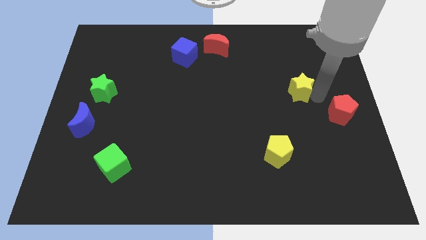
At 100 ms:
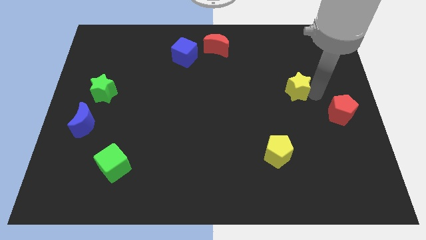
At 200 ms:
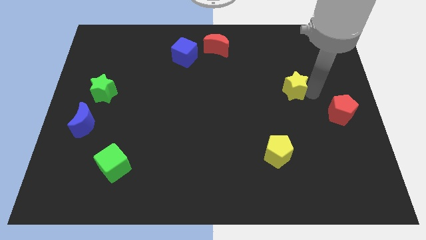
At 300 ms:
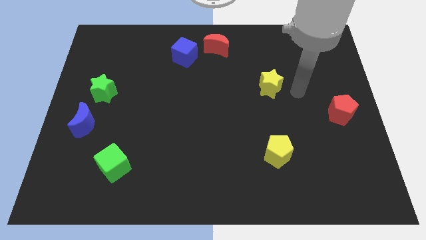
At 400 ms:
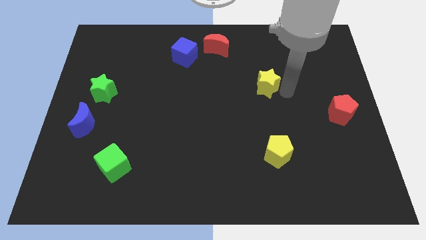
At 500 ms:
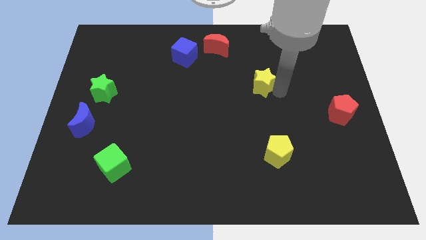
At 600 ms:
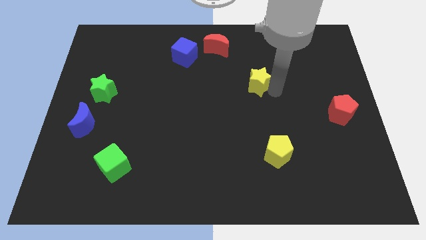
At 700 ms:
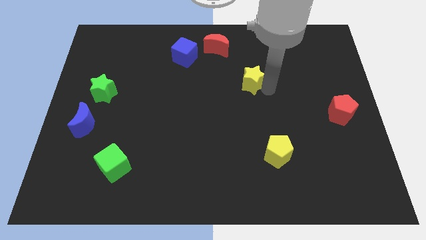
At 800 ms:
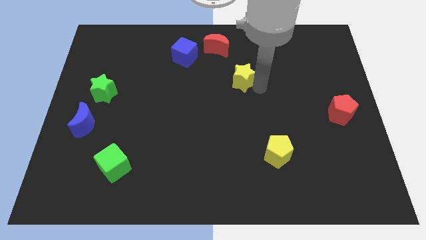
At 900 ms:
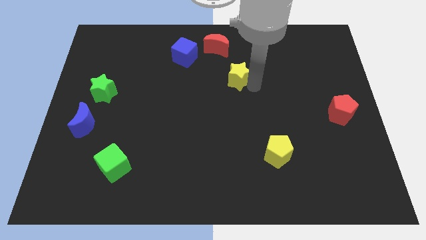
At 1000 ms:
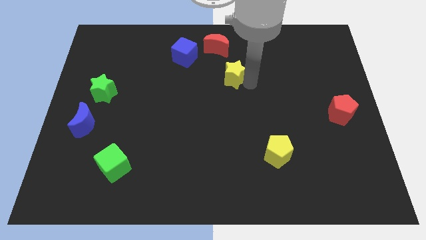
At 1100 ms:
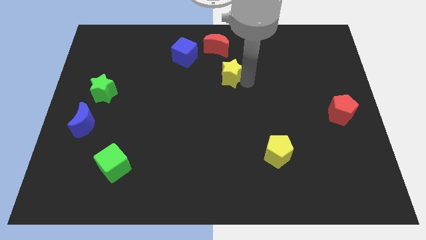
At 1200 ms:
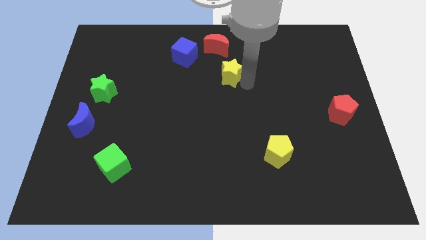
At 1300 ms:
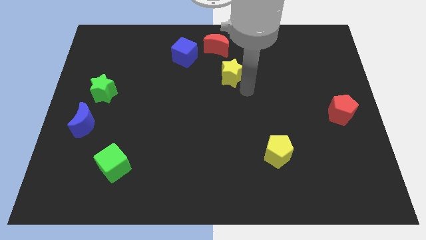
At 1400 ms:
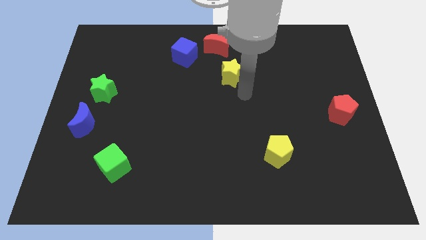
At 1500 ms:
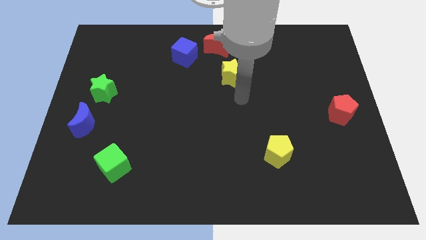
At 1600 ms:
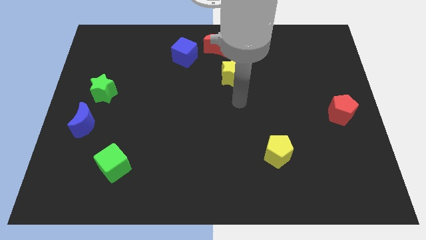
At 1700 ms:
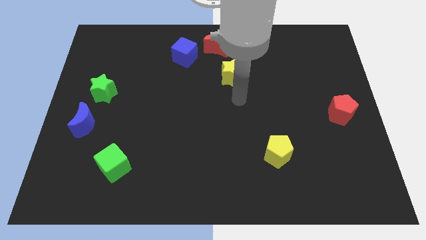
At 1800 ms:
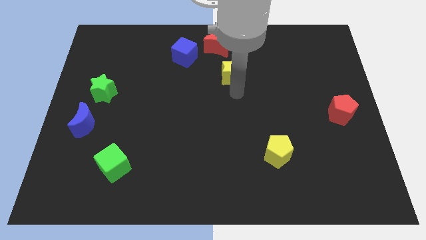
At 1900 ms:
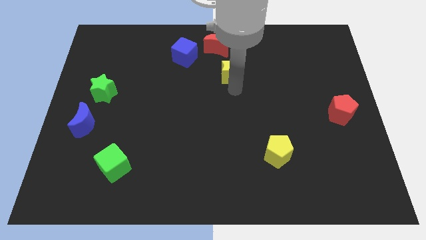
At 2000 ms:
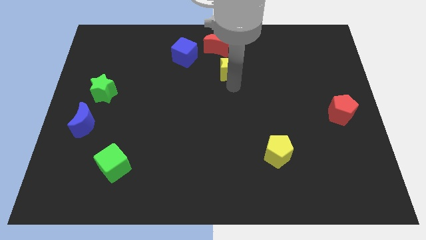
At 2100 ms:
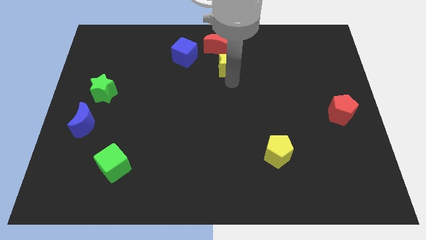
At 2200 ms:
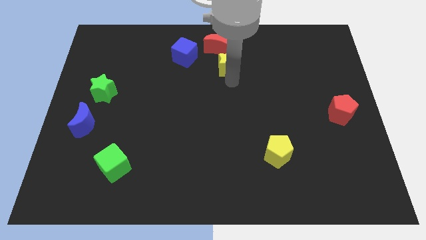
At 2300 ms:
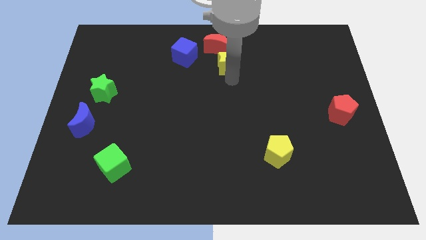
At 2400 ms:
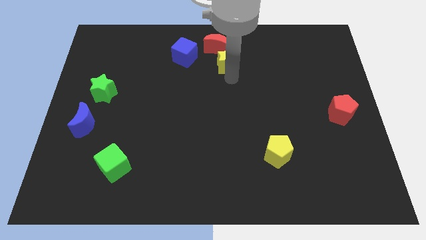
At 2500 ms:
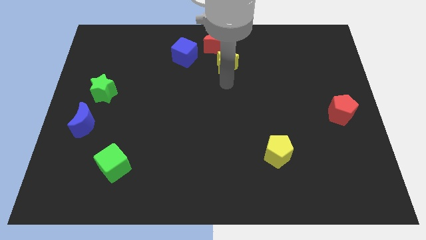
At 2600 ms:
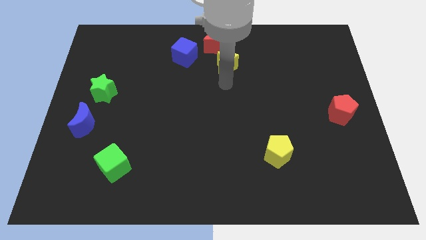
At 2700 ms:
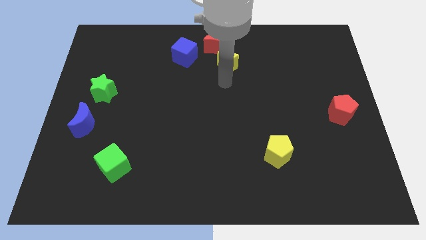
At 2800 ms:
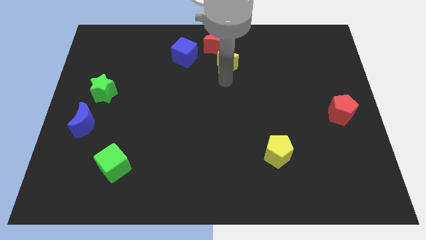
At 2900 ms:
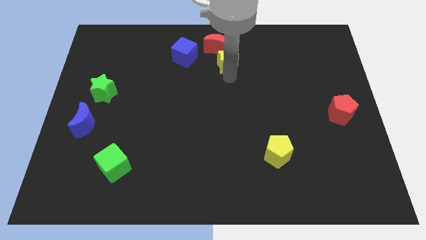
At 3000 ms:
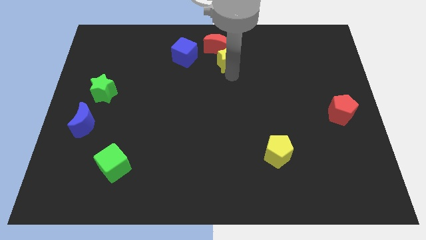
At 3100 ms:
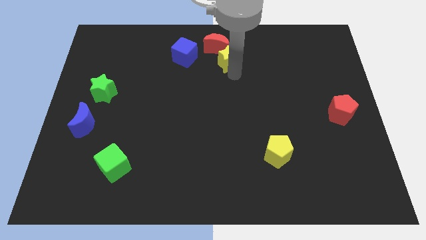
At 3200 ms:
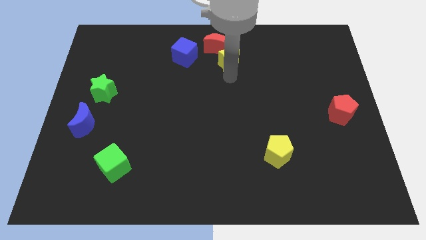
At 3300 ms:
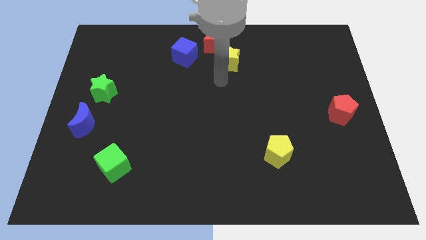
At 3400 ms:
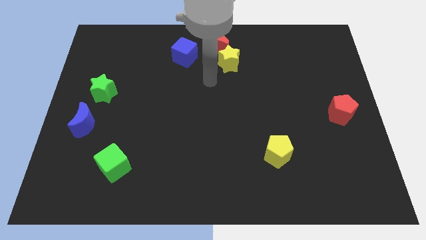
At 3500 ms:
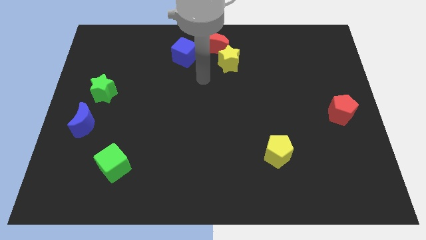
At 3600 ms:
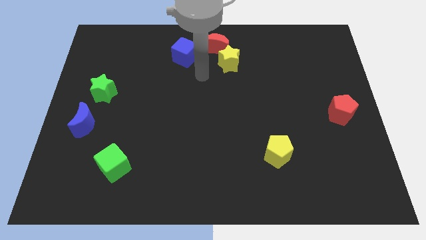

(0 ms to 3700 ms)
place yellow star to the bottom of the red crescent

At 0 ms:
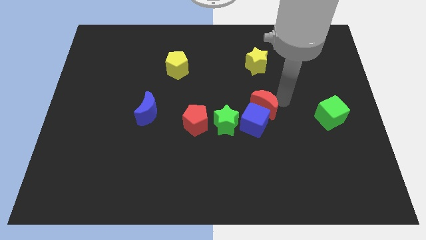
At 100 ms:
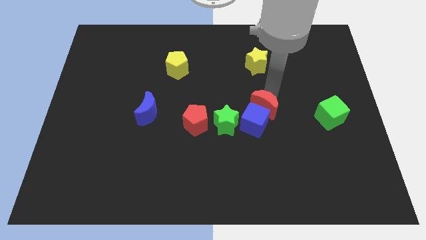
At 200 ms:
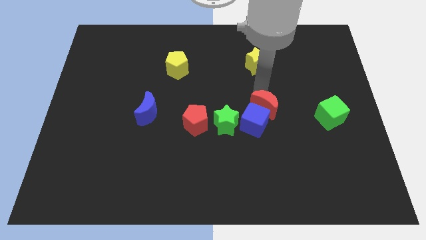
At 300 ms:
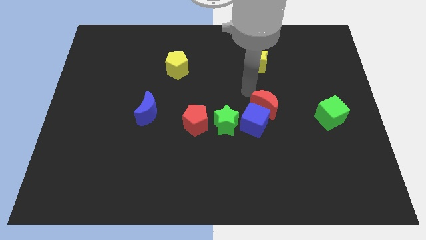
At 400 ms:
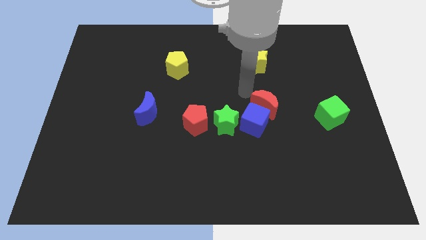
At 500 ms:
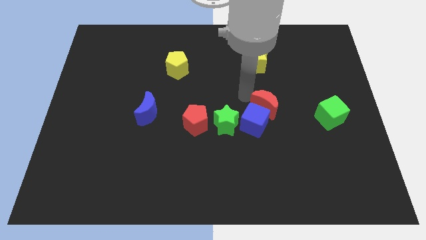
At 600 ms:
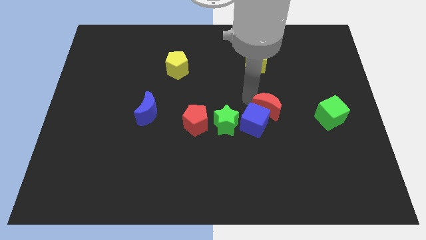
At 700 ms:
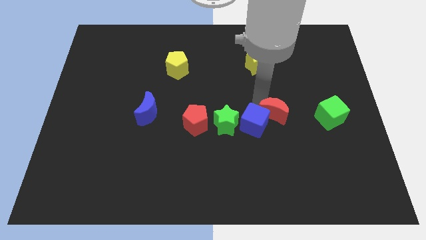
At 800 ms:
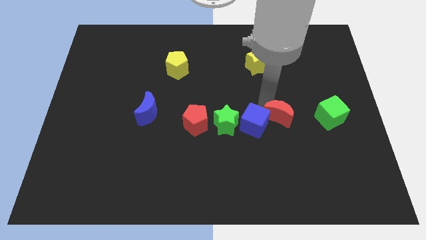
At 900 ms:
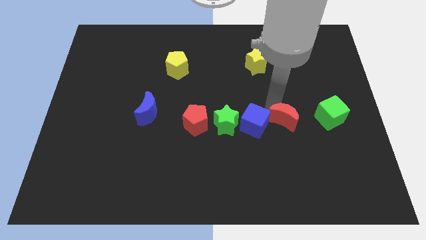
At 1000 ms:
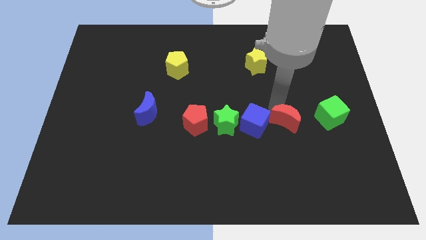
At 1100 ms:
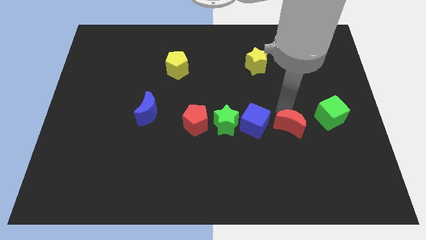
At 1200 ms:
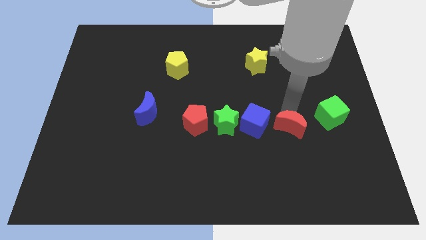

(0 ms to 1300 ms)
place the red crescent in between the blue cube and green cube

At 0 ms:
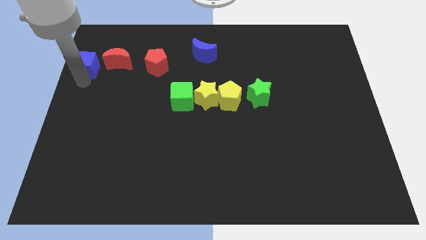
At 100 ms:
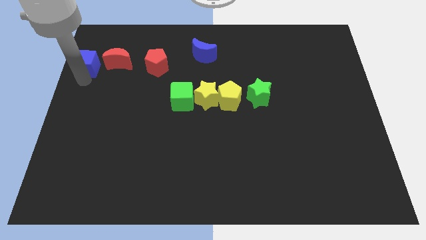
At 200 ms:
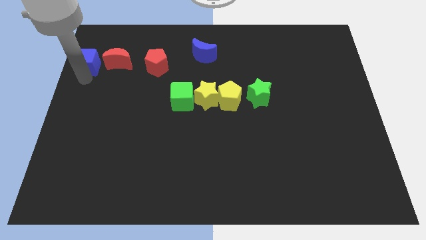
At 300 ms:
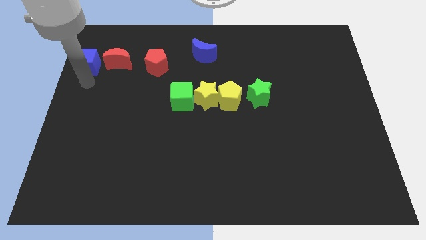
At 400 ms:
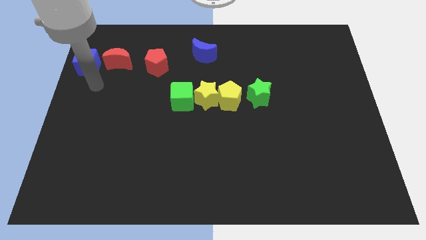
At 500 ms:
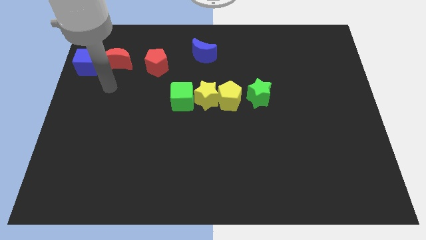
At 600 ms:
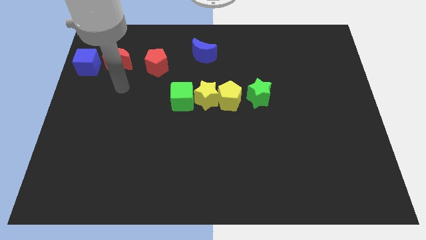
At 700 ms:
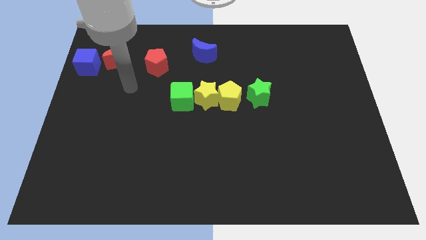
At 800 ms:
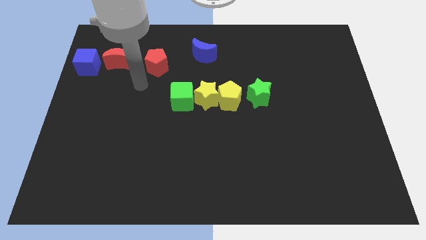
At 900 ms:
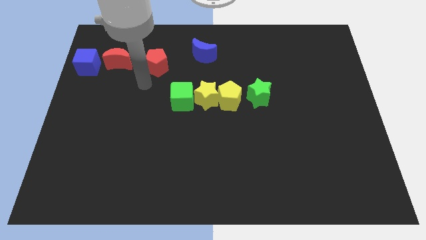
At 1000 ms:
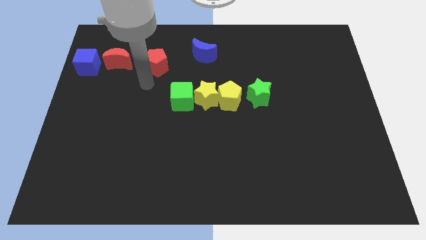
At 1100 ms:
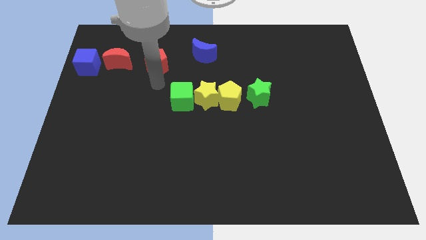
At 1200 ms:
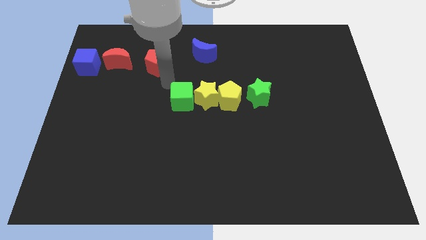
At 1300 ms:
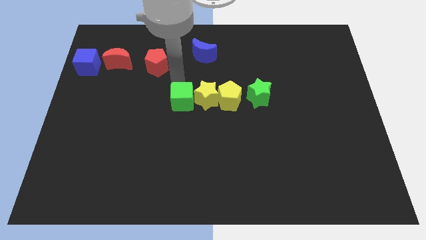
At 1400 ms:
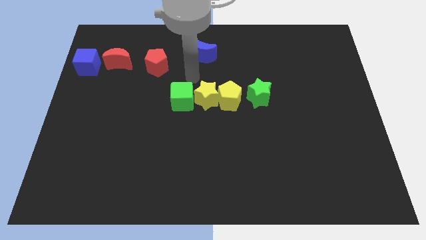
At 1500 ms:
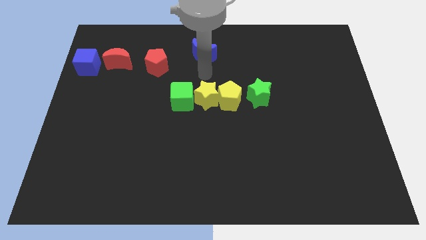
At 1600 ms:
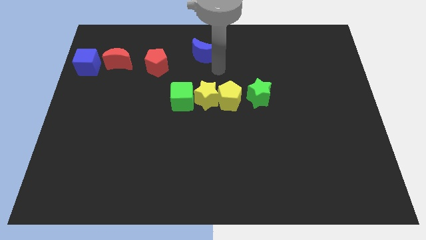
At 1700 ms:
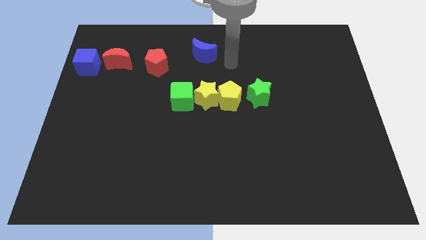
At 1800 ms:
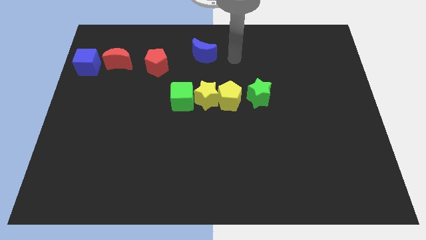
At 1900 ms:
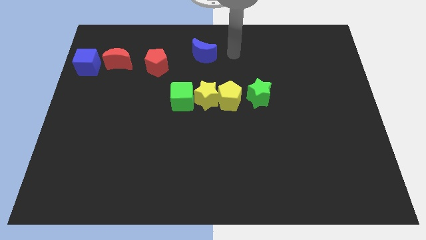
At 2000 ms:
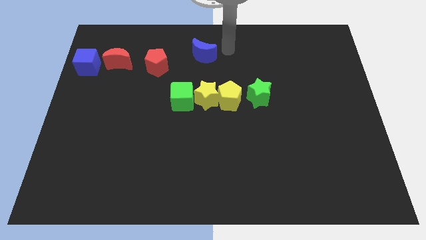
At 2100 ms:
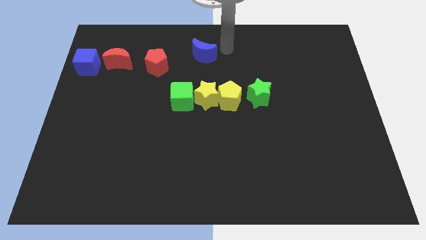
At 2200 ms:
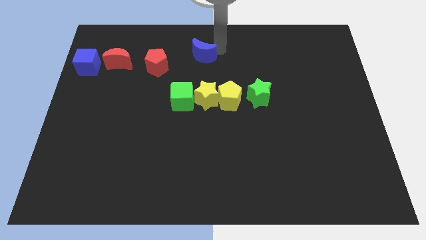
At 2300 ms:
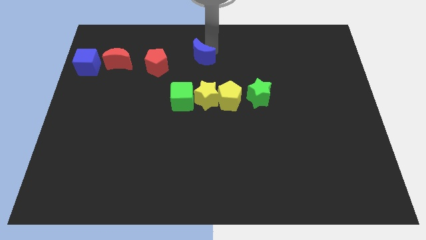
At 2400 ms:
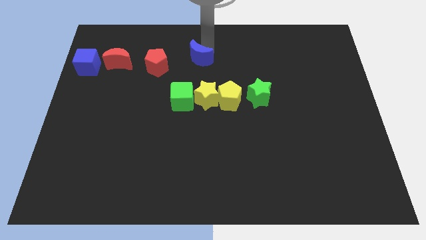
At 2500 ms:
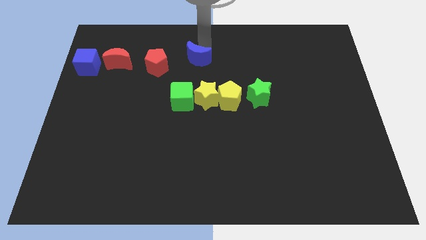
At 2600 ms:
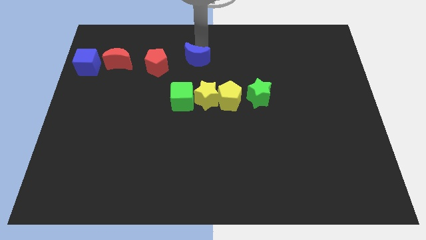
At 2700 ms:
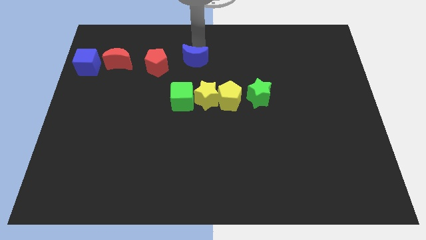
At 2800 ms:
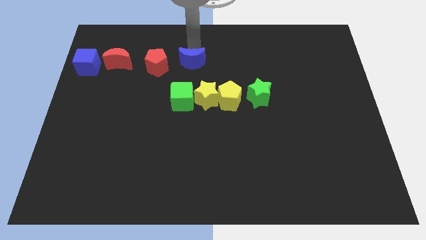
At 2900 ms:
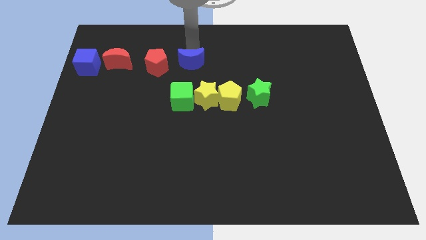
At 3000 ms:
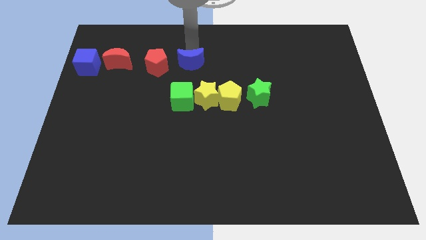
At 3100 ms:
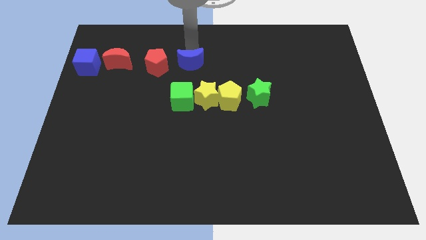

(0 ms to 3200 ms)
put the blue moon parallel right to the red pentagon

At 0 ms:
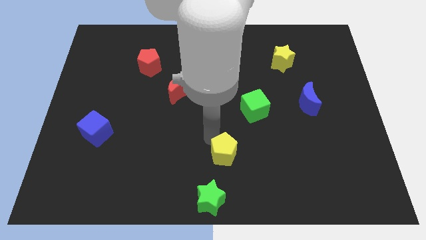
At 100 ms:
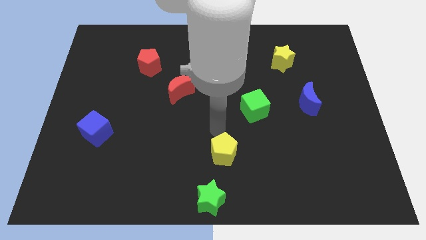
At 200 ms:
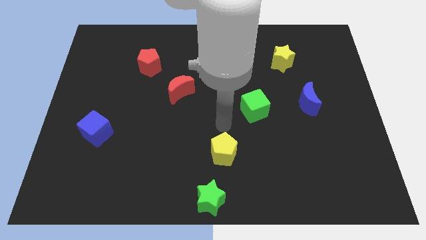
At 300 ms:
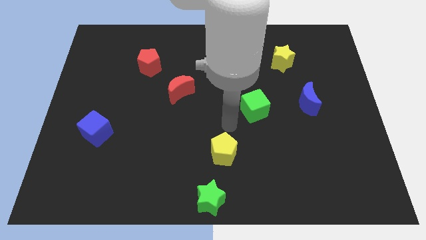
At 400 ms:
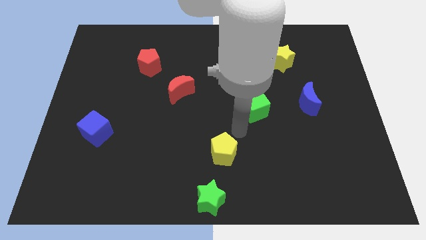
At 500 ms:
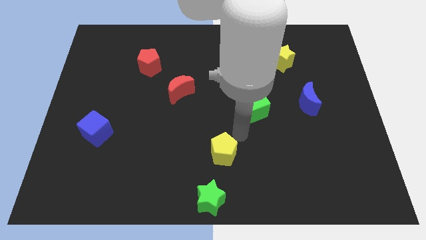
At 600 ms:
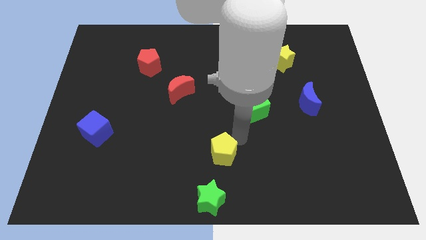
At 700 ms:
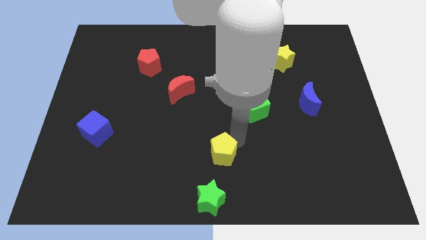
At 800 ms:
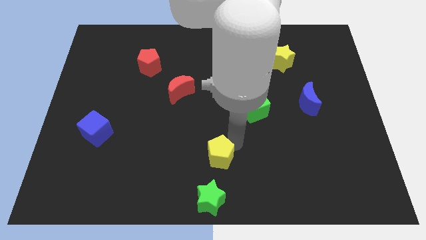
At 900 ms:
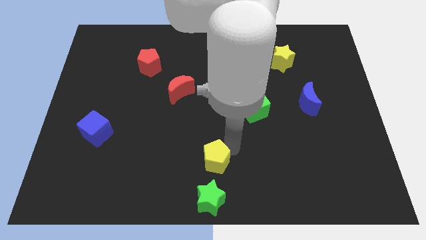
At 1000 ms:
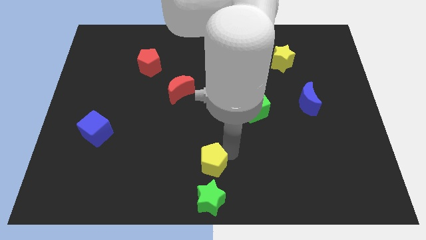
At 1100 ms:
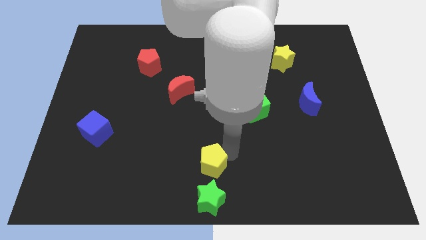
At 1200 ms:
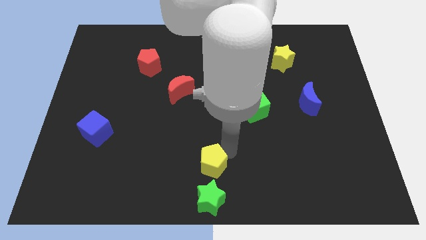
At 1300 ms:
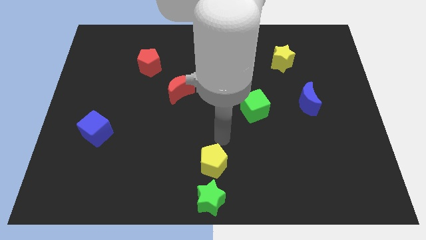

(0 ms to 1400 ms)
move the yellow pentagon to the top of the green star
